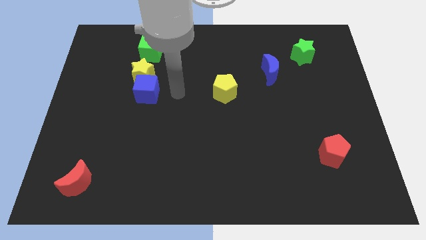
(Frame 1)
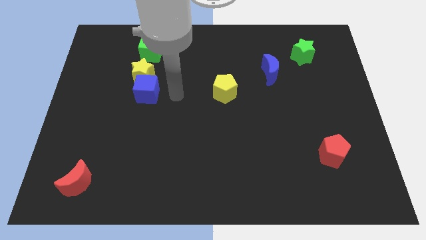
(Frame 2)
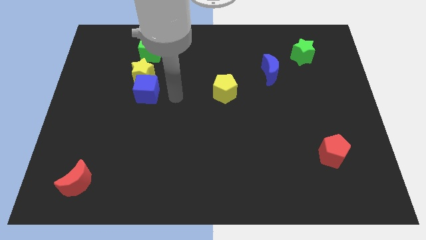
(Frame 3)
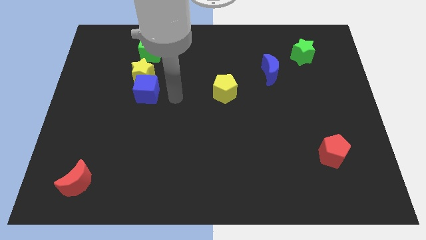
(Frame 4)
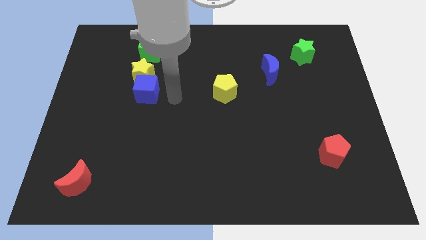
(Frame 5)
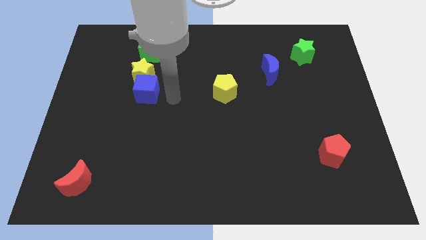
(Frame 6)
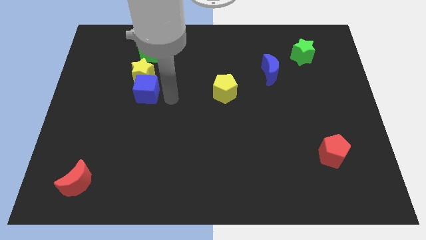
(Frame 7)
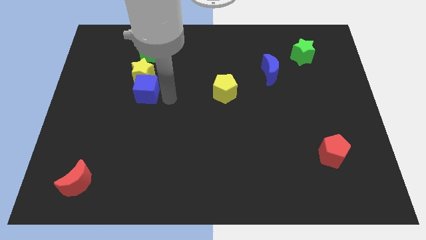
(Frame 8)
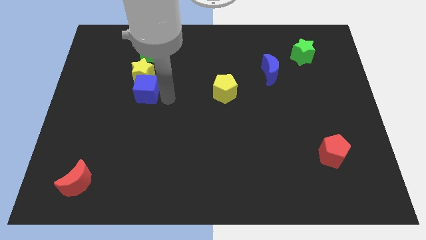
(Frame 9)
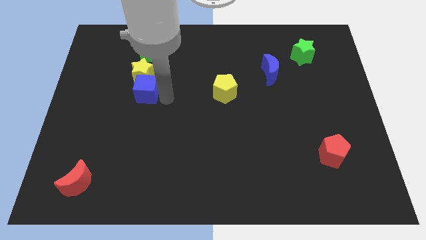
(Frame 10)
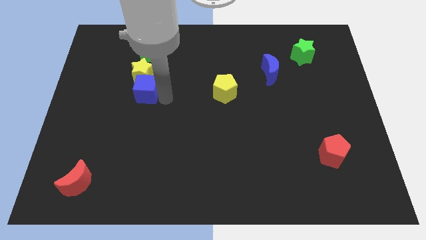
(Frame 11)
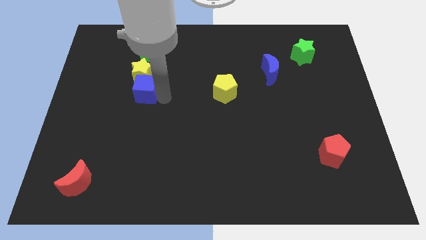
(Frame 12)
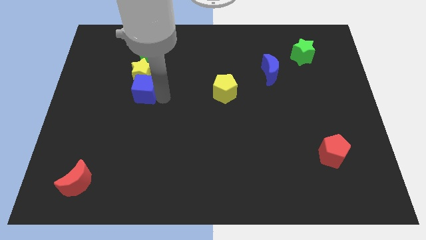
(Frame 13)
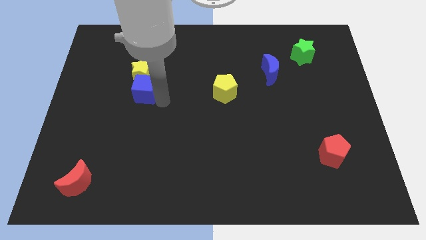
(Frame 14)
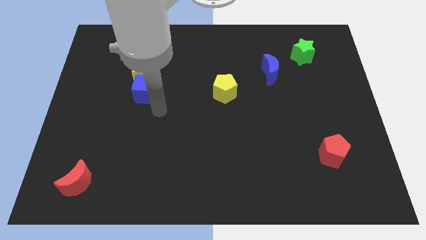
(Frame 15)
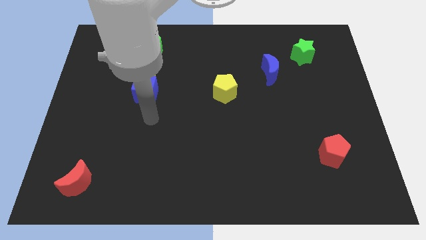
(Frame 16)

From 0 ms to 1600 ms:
slightly touch the blue cube to the right

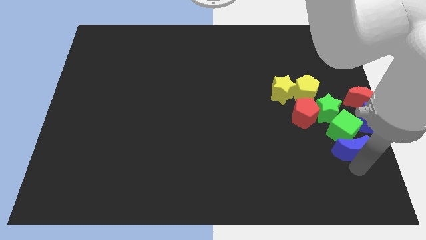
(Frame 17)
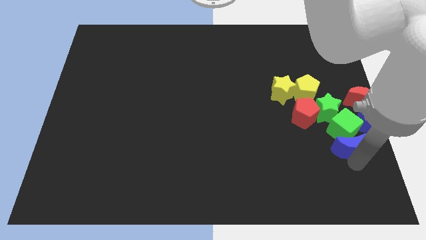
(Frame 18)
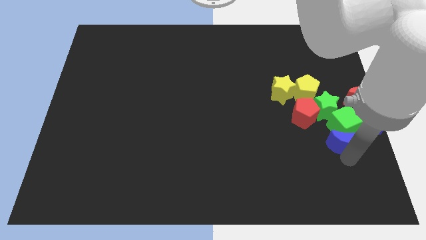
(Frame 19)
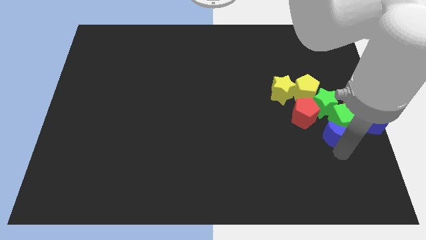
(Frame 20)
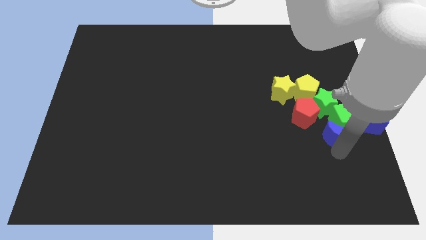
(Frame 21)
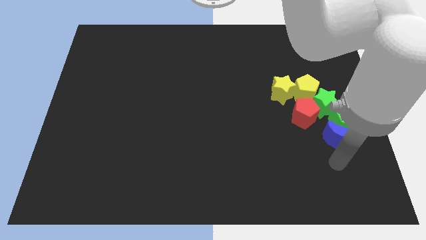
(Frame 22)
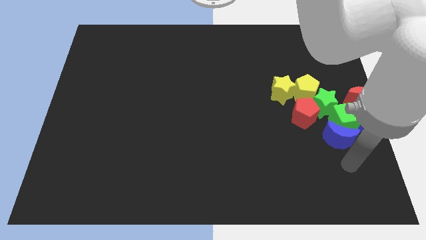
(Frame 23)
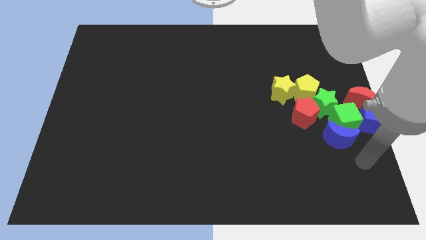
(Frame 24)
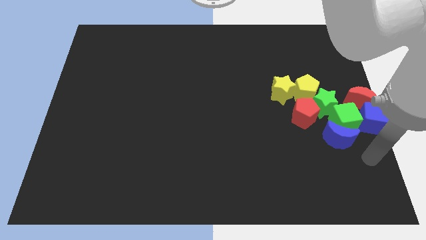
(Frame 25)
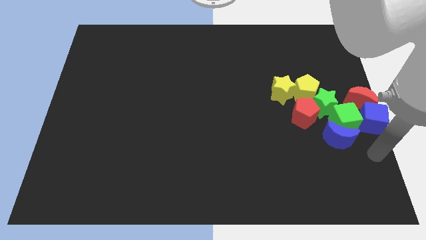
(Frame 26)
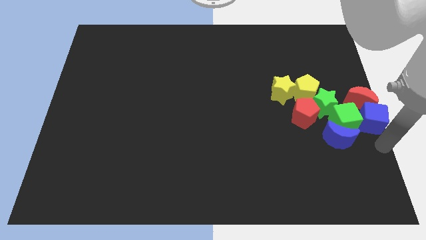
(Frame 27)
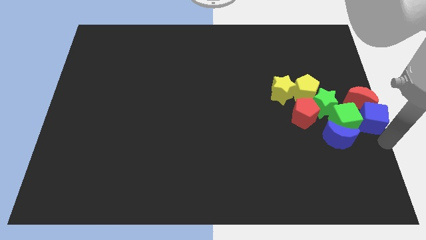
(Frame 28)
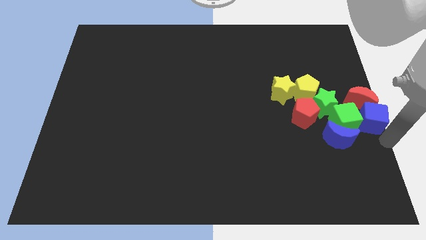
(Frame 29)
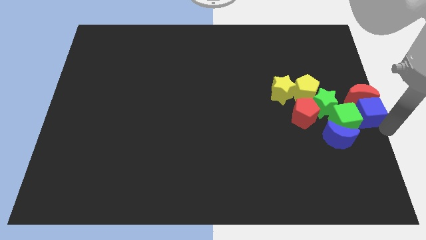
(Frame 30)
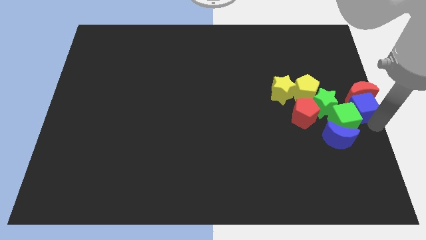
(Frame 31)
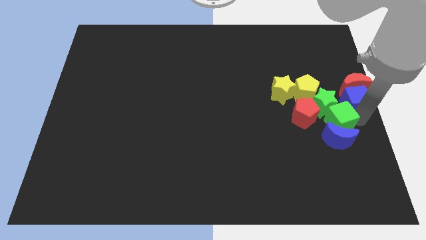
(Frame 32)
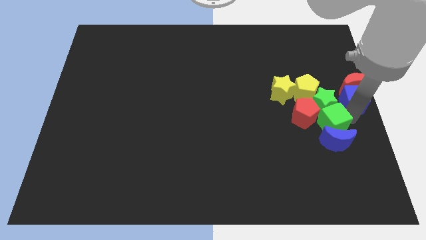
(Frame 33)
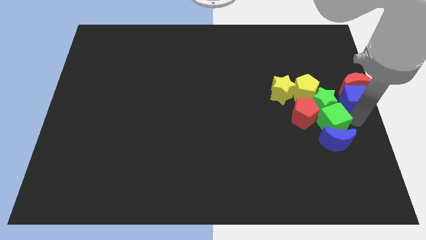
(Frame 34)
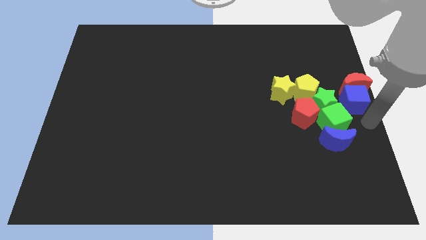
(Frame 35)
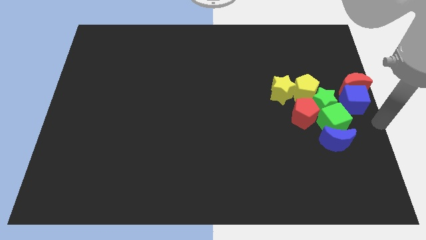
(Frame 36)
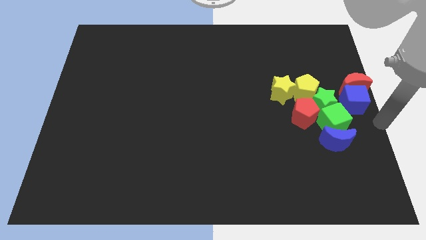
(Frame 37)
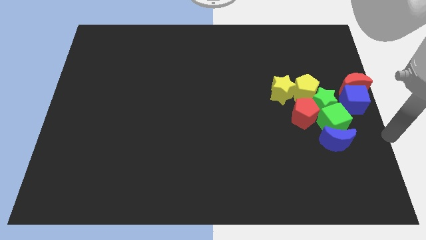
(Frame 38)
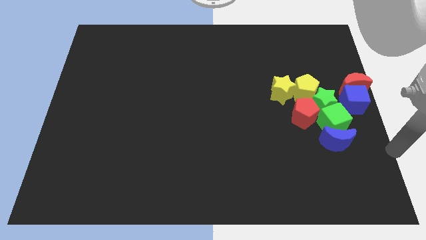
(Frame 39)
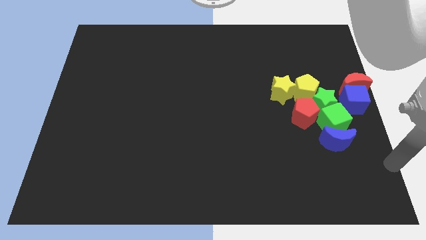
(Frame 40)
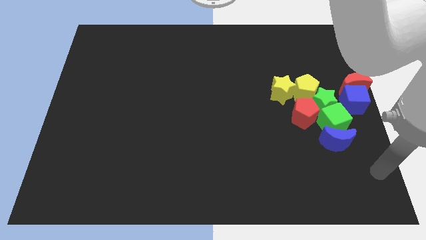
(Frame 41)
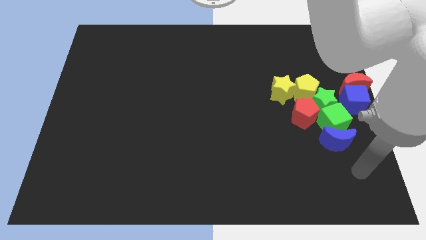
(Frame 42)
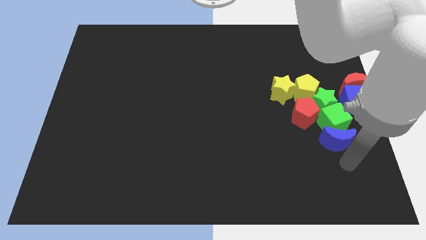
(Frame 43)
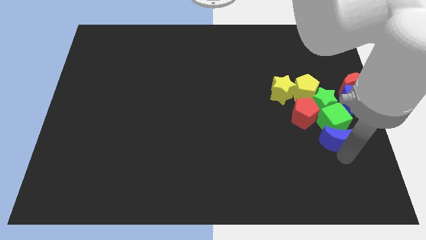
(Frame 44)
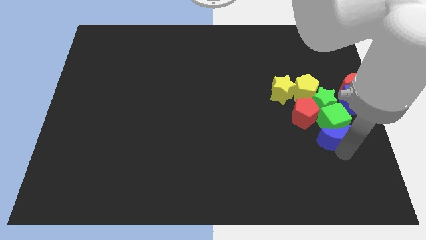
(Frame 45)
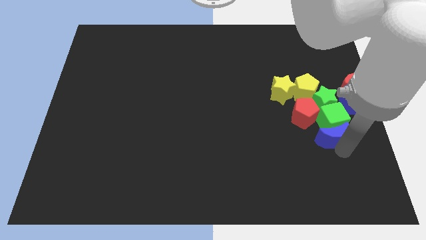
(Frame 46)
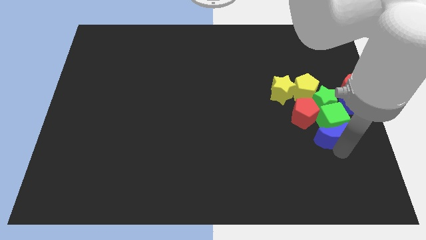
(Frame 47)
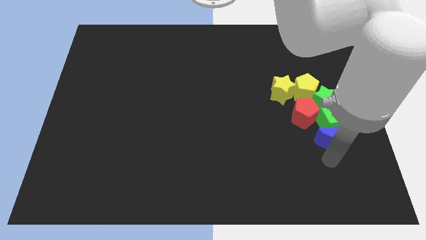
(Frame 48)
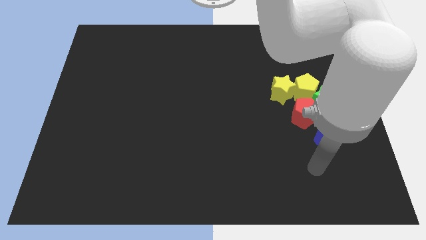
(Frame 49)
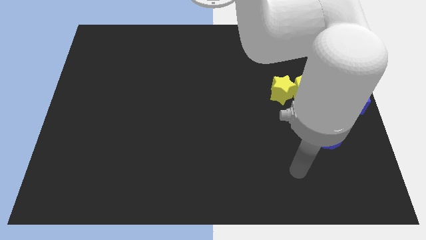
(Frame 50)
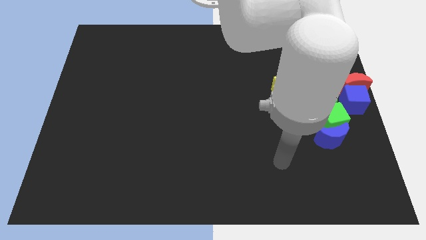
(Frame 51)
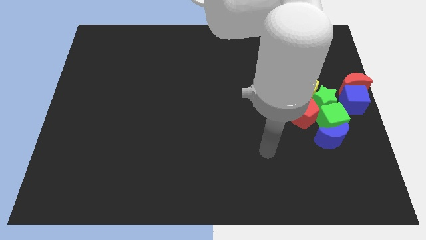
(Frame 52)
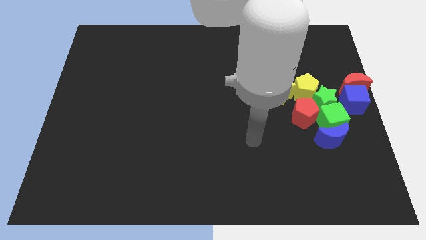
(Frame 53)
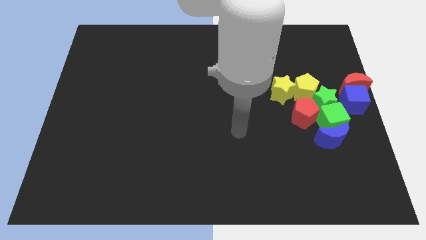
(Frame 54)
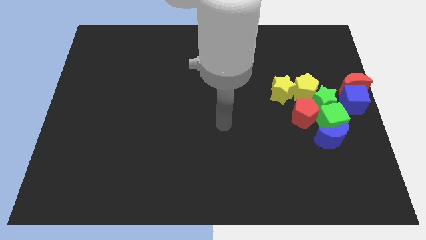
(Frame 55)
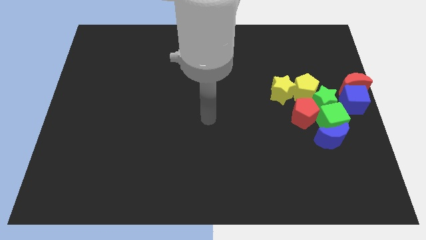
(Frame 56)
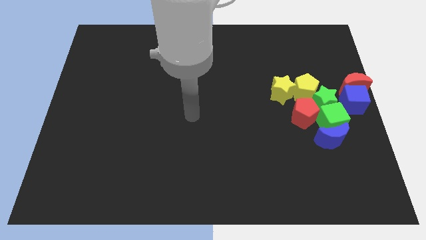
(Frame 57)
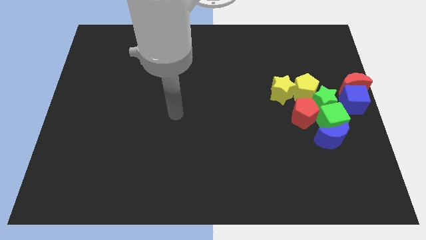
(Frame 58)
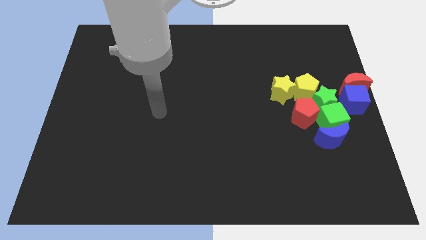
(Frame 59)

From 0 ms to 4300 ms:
push all the blocks close to each other at the center right

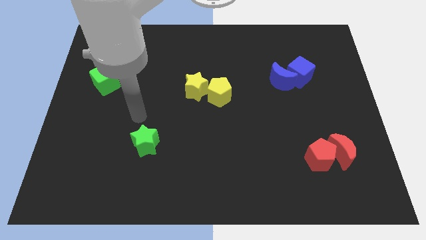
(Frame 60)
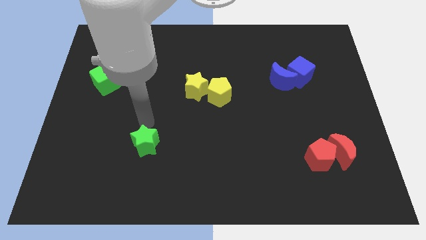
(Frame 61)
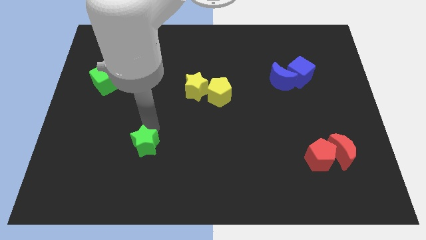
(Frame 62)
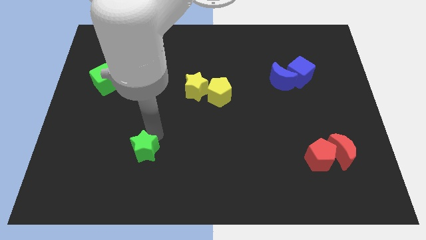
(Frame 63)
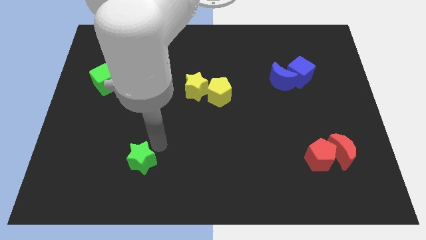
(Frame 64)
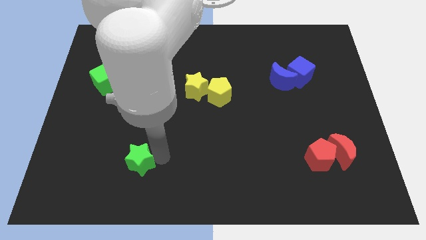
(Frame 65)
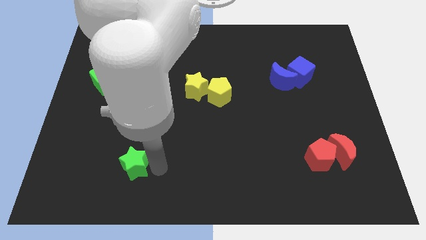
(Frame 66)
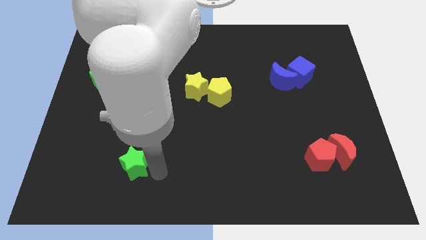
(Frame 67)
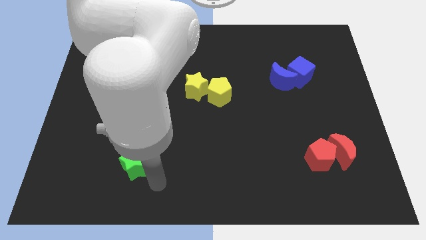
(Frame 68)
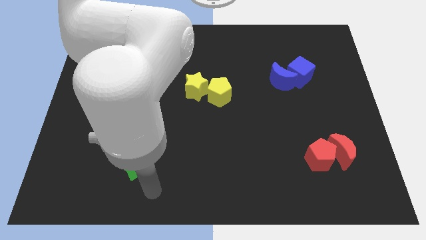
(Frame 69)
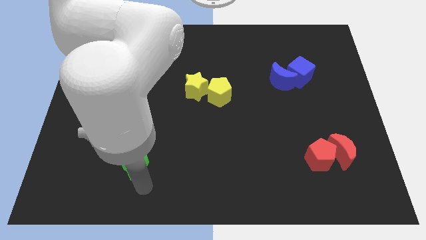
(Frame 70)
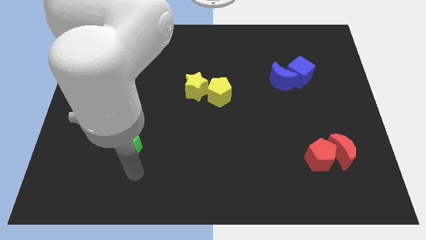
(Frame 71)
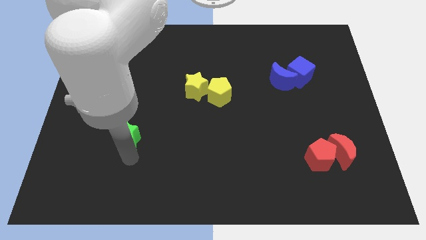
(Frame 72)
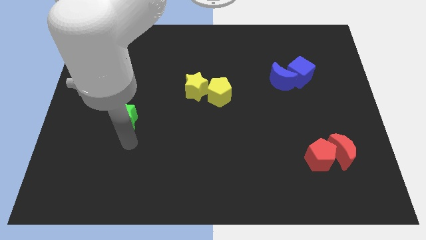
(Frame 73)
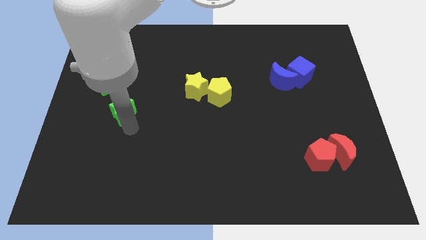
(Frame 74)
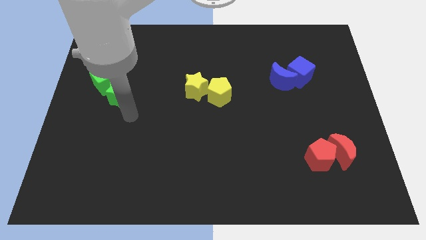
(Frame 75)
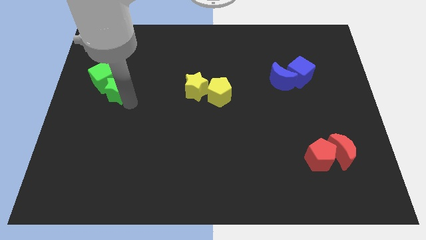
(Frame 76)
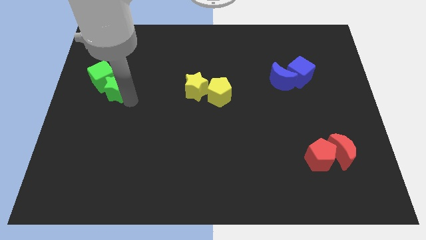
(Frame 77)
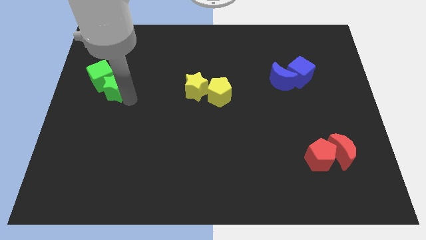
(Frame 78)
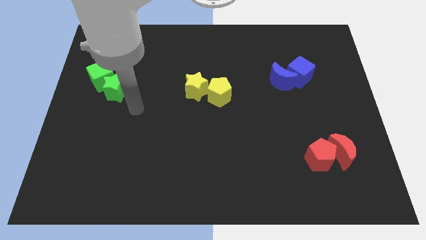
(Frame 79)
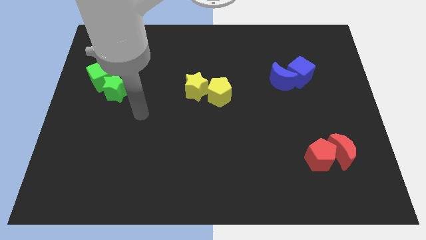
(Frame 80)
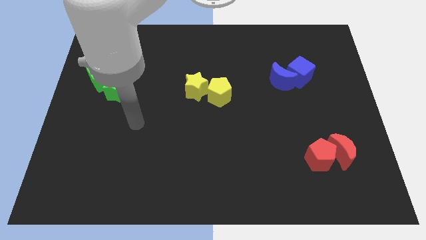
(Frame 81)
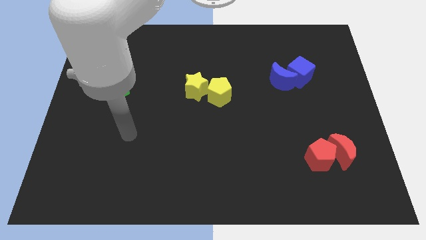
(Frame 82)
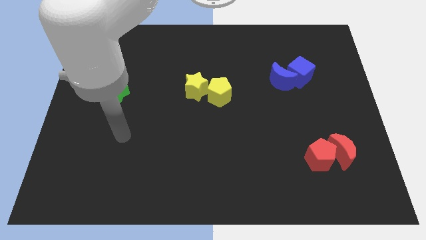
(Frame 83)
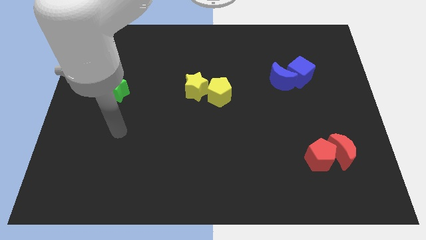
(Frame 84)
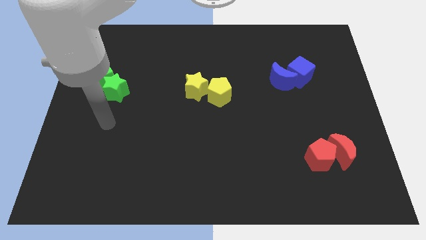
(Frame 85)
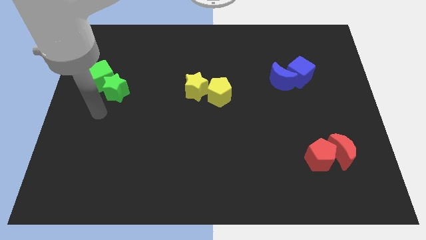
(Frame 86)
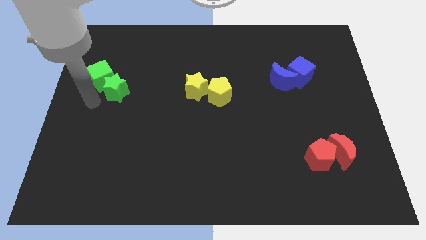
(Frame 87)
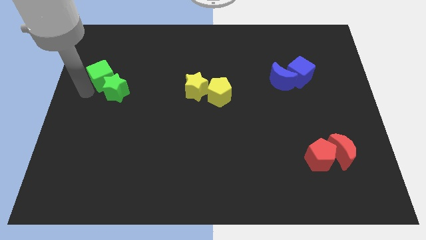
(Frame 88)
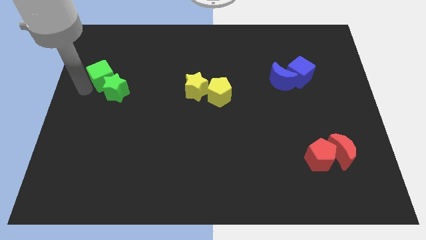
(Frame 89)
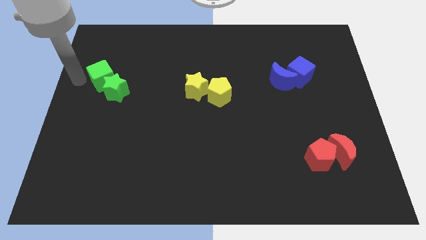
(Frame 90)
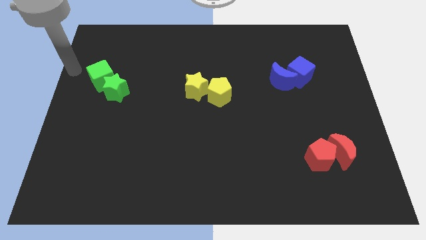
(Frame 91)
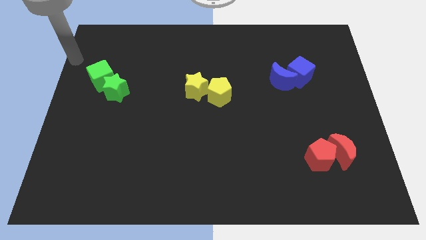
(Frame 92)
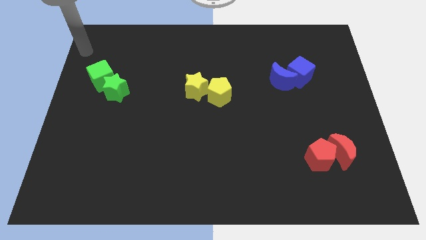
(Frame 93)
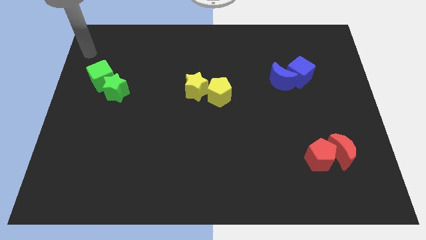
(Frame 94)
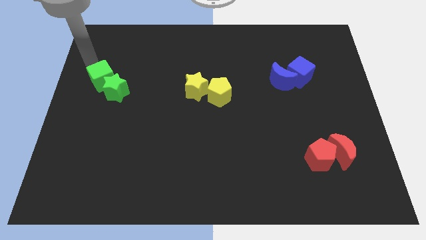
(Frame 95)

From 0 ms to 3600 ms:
place the green star close to the green cube
